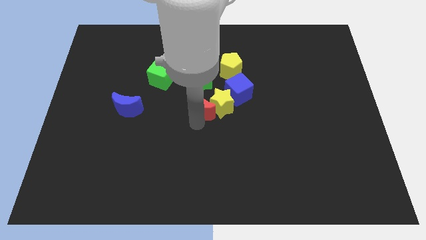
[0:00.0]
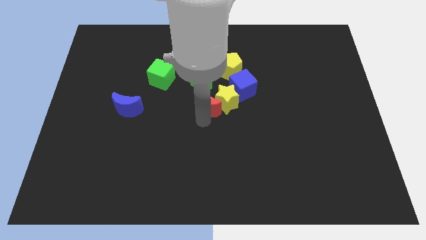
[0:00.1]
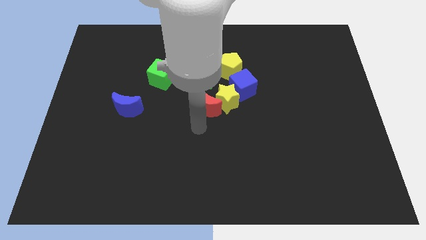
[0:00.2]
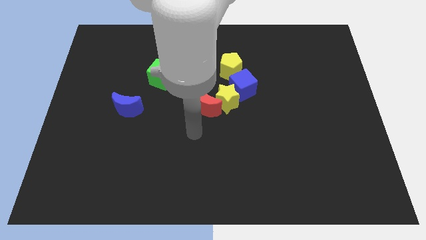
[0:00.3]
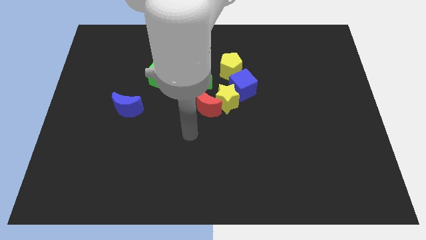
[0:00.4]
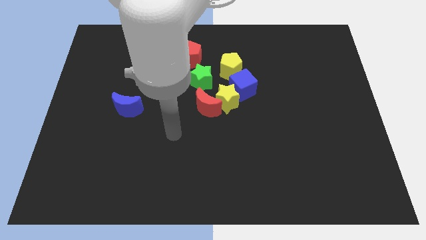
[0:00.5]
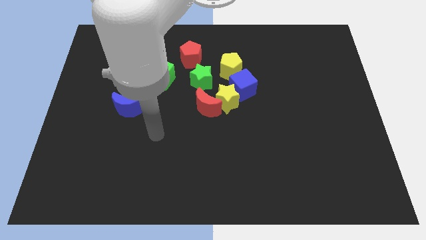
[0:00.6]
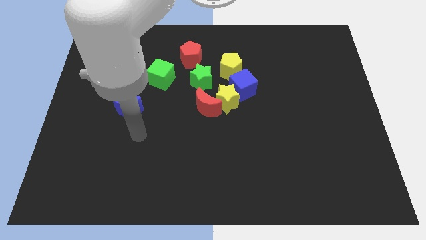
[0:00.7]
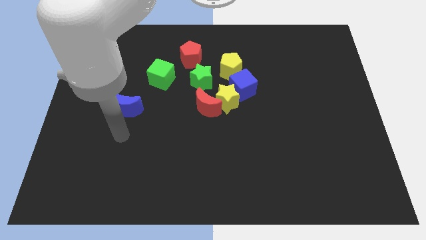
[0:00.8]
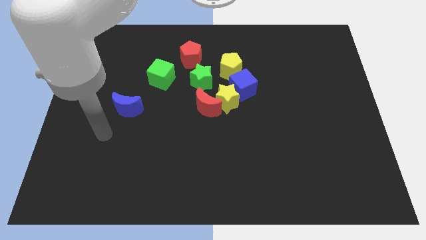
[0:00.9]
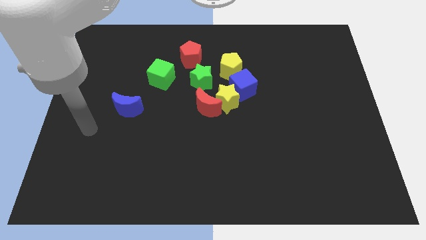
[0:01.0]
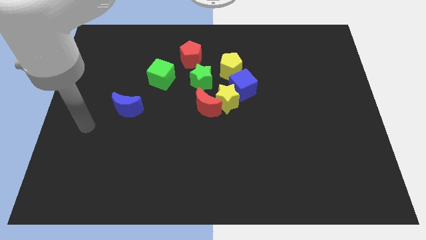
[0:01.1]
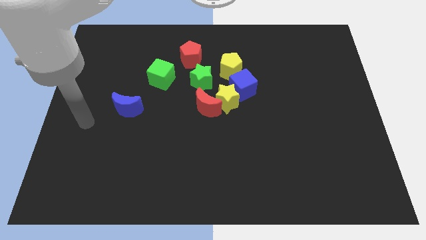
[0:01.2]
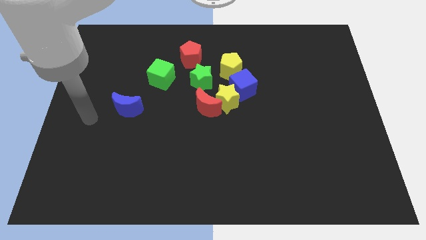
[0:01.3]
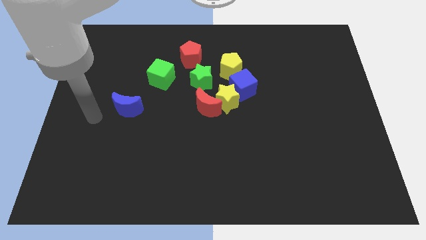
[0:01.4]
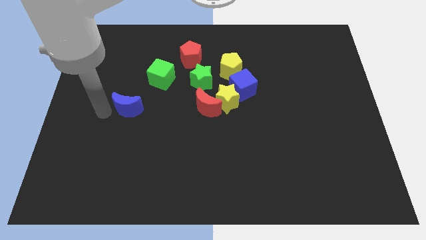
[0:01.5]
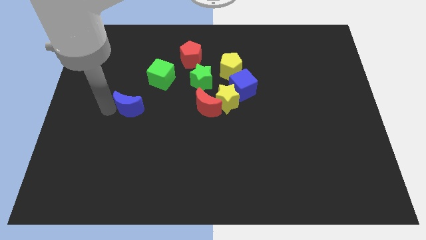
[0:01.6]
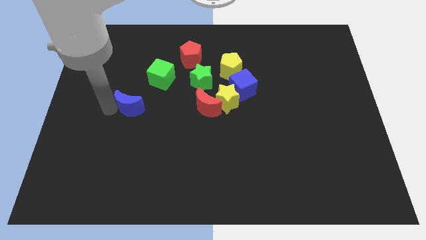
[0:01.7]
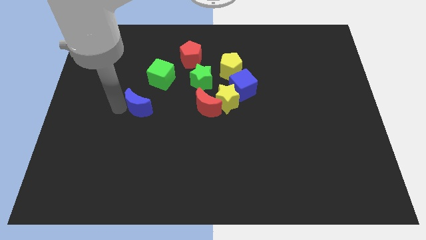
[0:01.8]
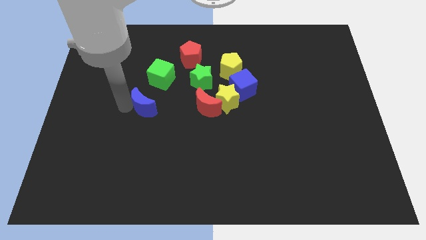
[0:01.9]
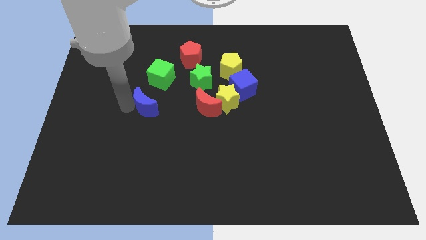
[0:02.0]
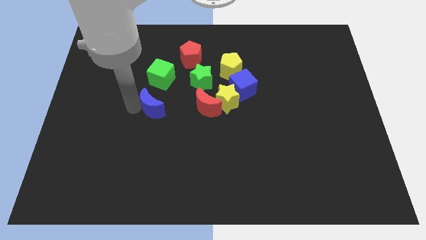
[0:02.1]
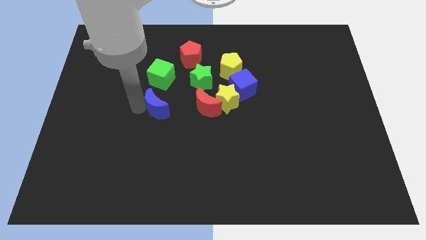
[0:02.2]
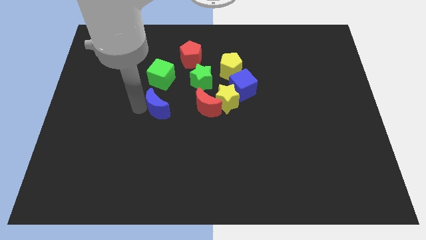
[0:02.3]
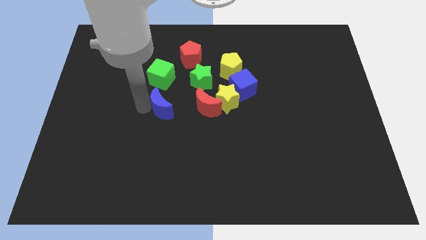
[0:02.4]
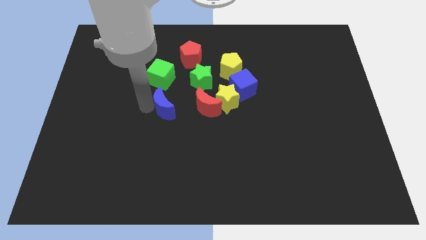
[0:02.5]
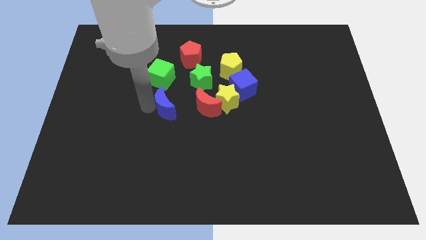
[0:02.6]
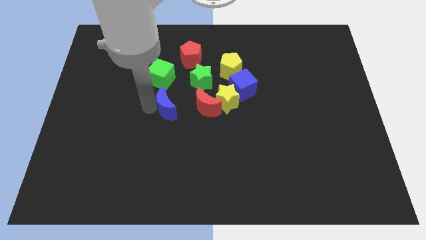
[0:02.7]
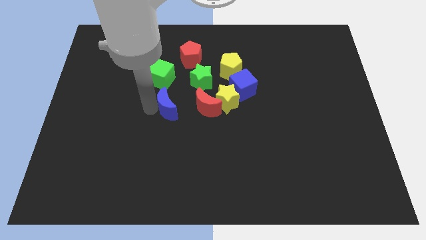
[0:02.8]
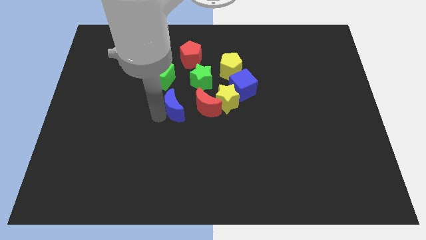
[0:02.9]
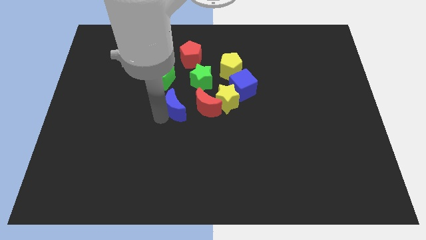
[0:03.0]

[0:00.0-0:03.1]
push blue crescent below green cube

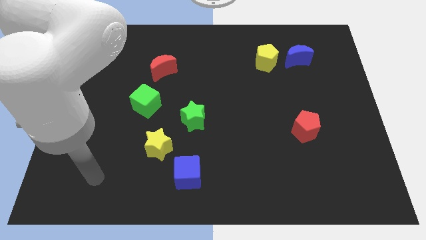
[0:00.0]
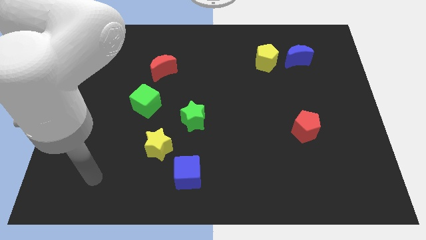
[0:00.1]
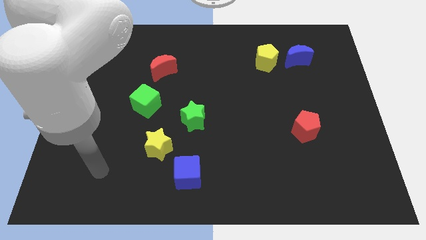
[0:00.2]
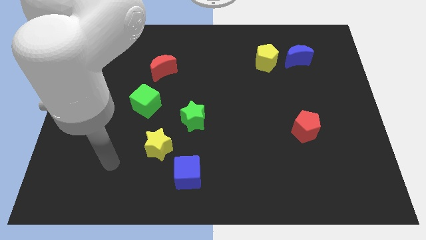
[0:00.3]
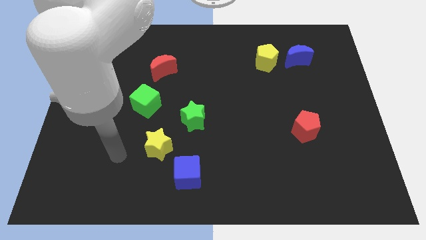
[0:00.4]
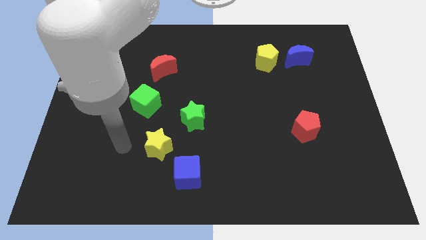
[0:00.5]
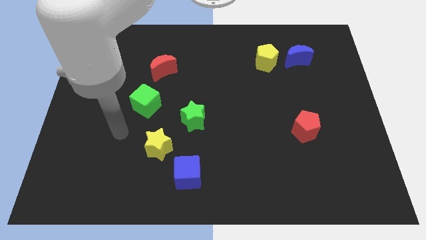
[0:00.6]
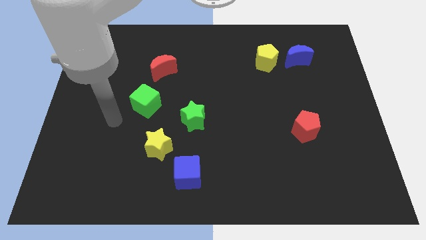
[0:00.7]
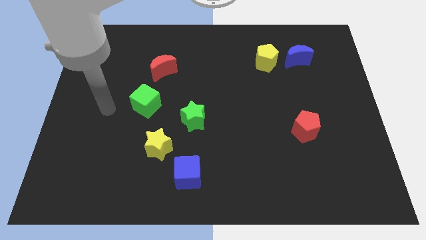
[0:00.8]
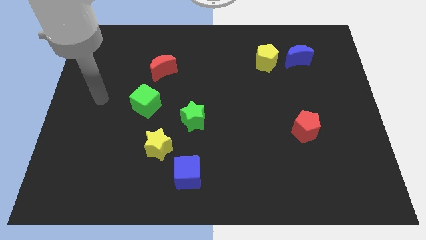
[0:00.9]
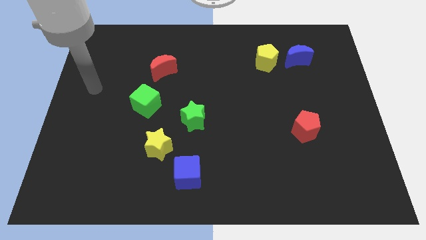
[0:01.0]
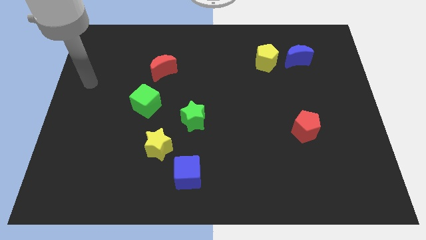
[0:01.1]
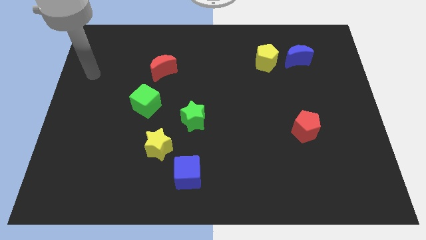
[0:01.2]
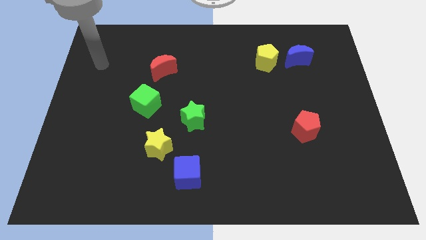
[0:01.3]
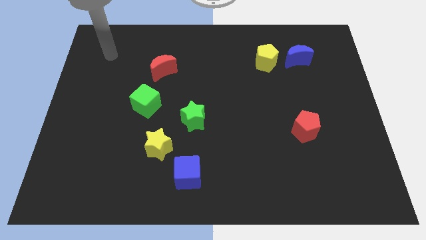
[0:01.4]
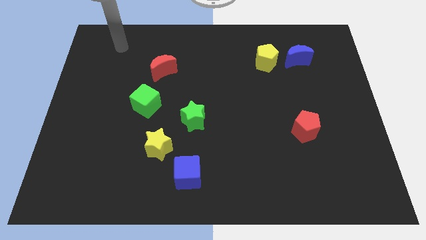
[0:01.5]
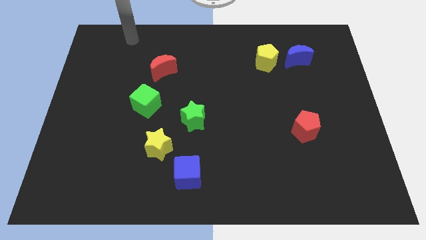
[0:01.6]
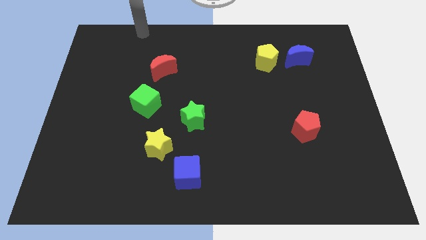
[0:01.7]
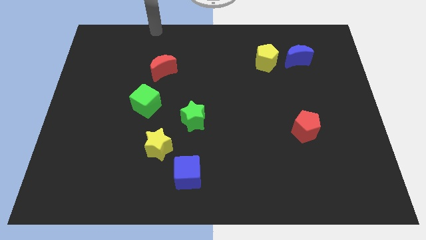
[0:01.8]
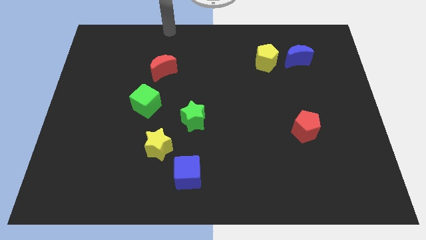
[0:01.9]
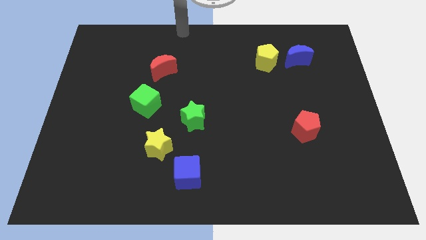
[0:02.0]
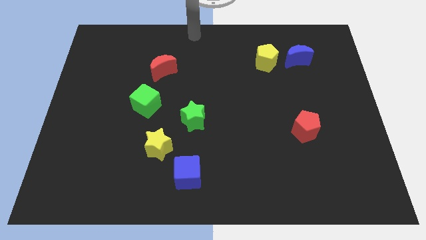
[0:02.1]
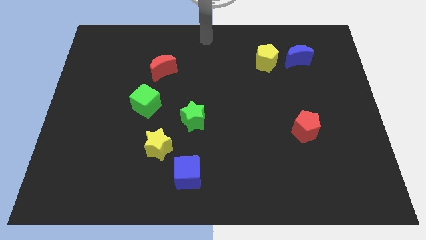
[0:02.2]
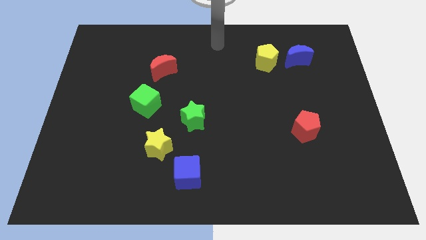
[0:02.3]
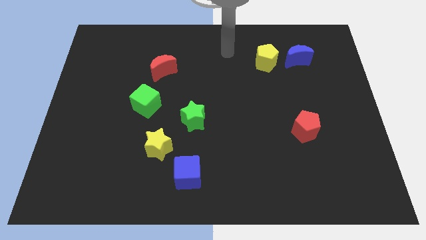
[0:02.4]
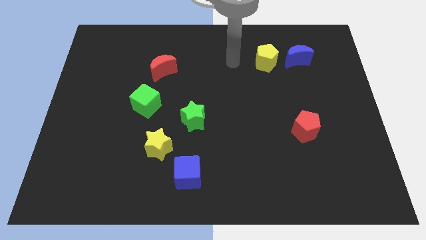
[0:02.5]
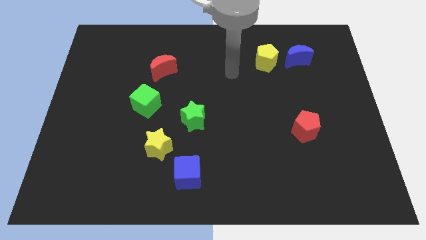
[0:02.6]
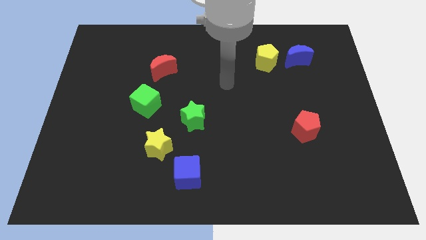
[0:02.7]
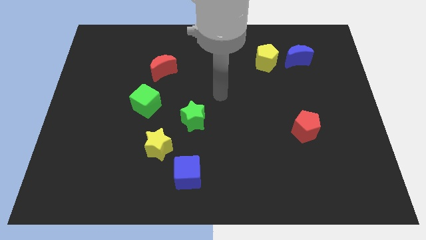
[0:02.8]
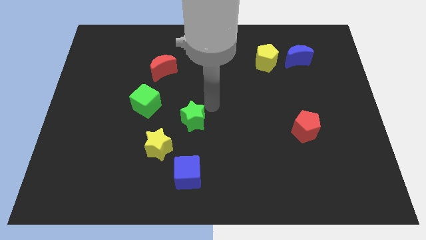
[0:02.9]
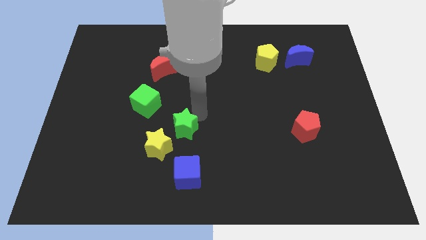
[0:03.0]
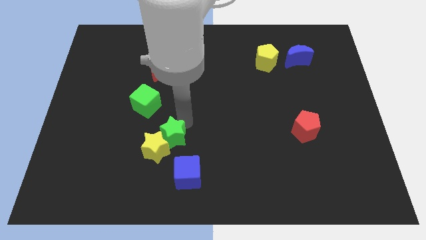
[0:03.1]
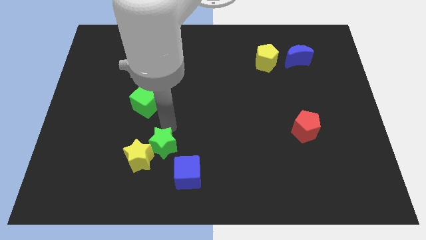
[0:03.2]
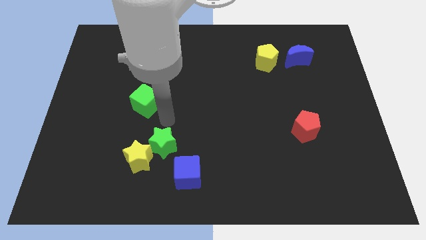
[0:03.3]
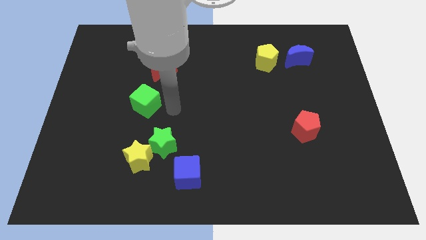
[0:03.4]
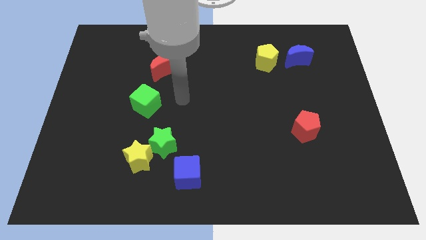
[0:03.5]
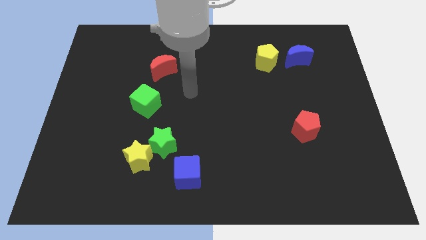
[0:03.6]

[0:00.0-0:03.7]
move green star and yellow star together to the bottom left side of the board

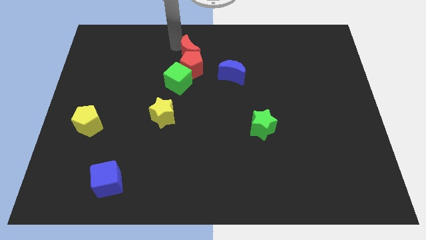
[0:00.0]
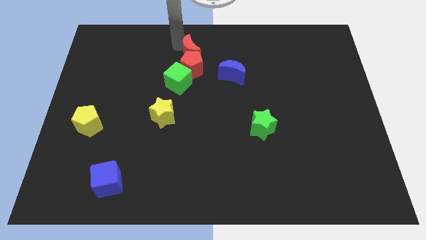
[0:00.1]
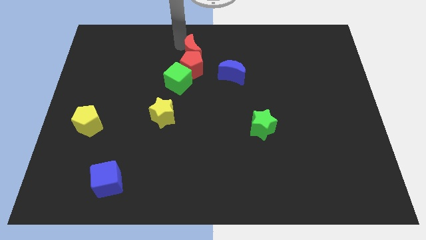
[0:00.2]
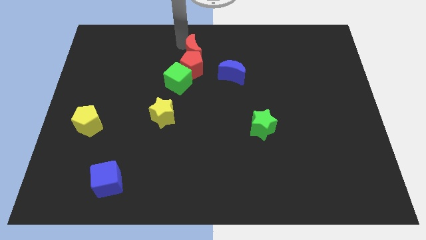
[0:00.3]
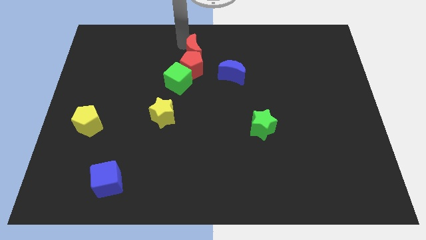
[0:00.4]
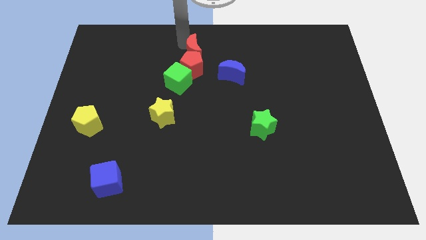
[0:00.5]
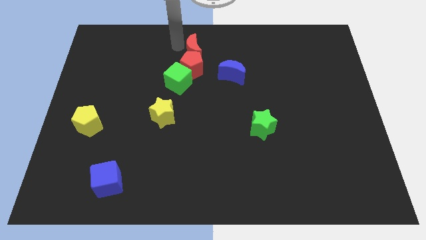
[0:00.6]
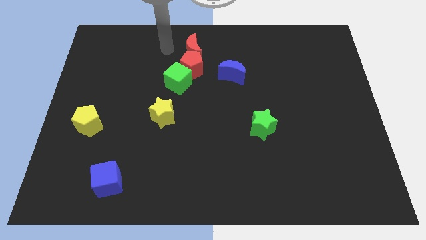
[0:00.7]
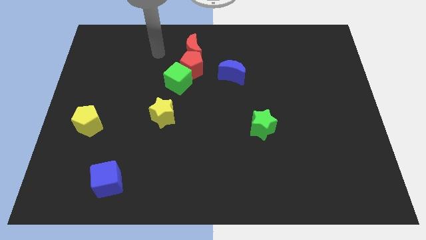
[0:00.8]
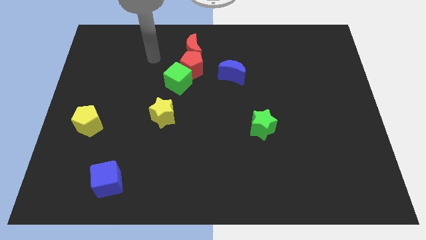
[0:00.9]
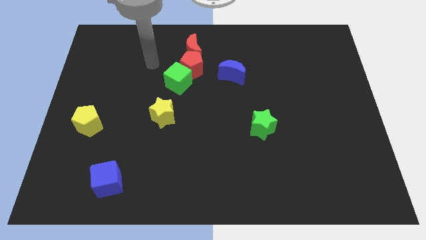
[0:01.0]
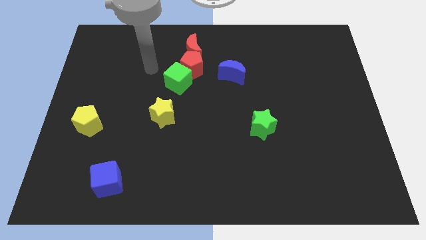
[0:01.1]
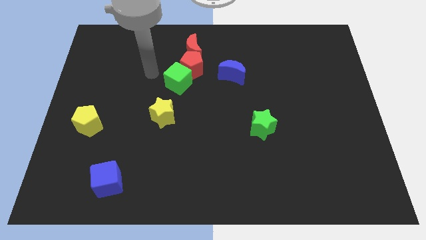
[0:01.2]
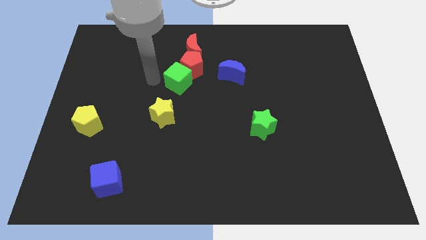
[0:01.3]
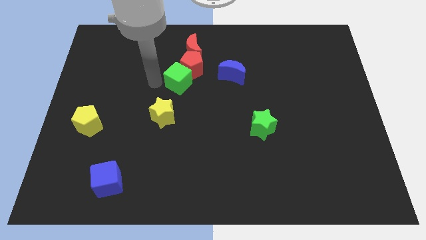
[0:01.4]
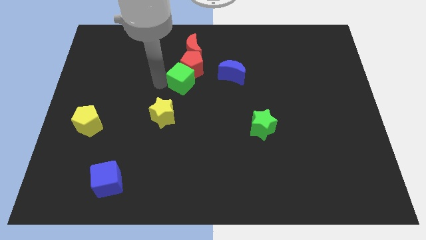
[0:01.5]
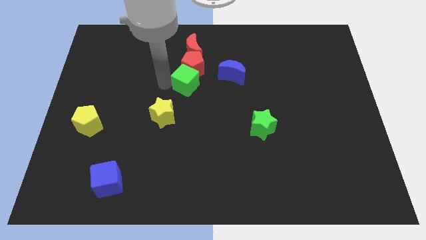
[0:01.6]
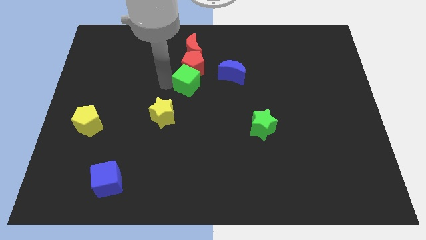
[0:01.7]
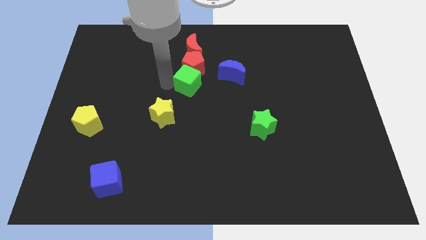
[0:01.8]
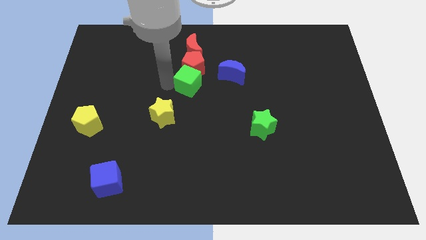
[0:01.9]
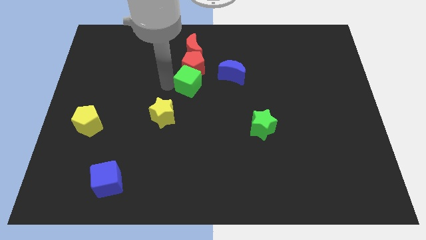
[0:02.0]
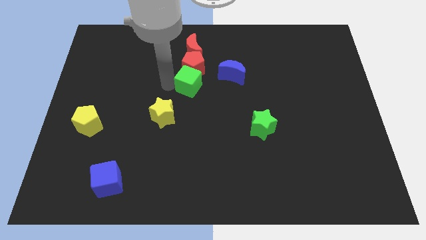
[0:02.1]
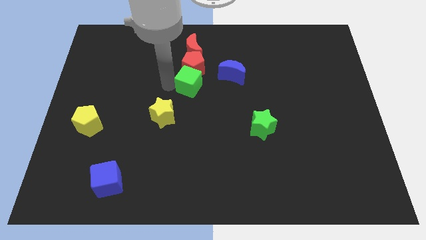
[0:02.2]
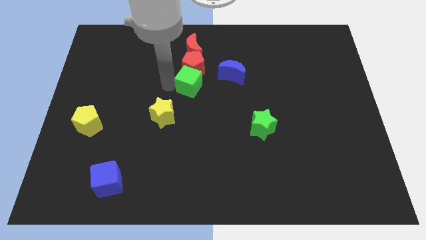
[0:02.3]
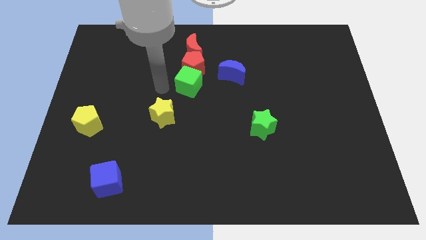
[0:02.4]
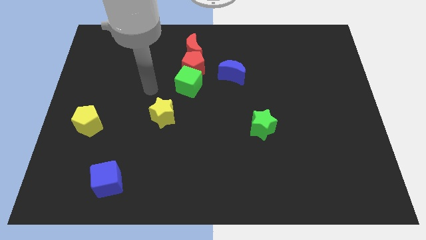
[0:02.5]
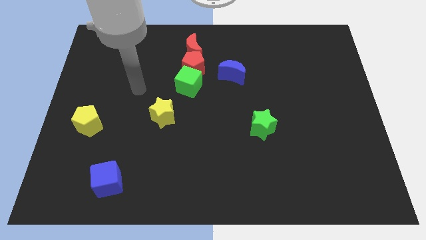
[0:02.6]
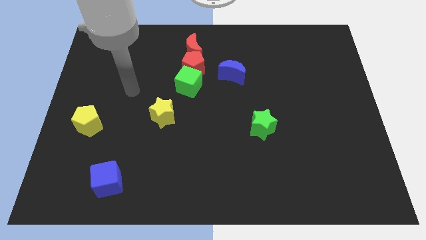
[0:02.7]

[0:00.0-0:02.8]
slightly move the green cube towards the right
